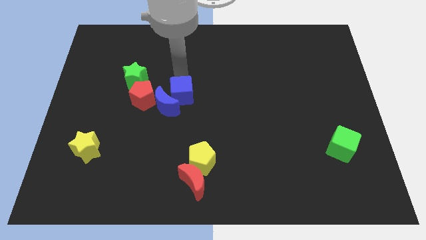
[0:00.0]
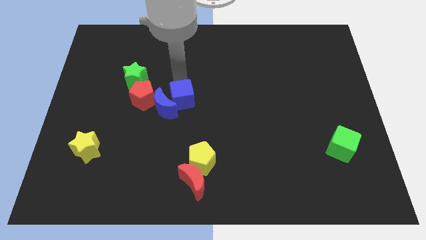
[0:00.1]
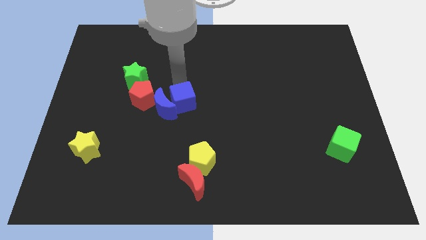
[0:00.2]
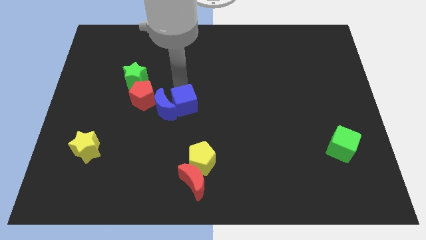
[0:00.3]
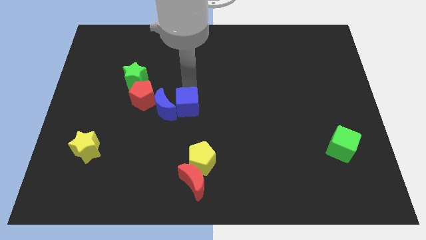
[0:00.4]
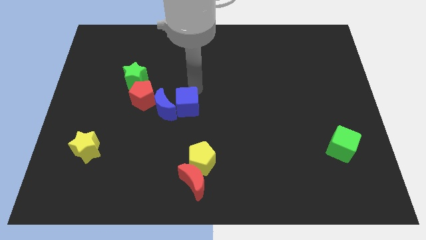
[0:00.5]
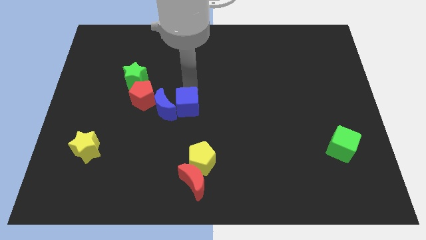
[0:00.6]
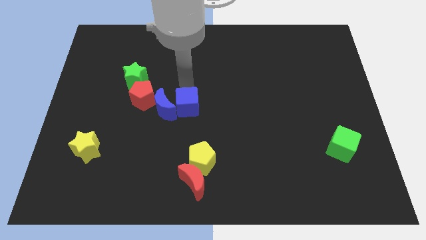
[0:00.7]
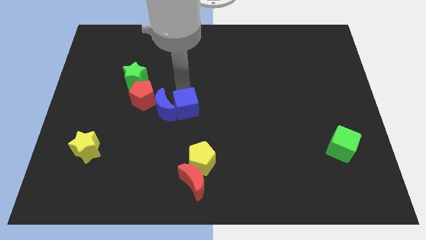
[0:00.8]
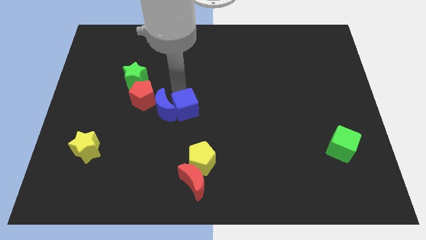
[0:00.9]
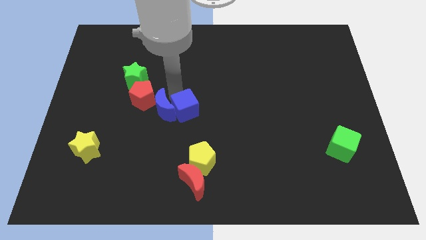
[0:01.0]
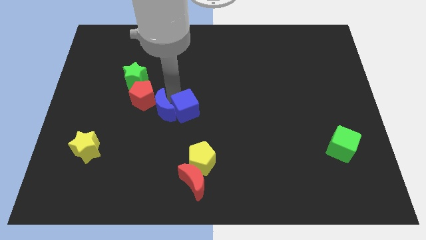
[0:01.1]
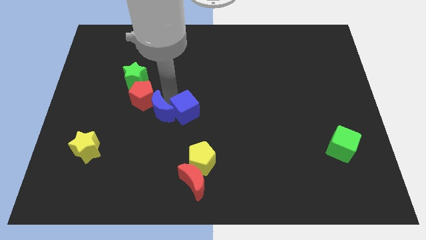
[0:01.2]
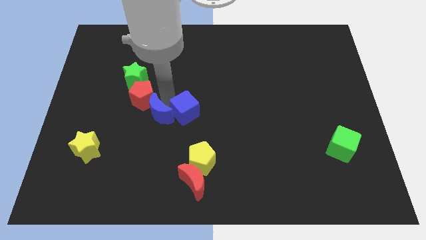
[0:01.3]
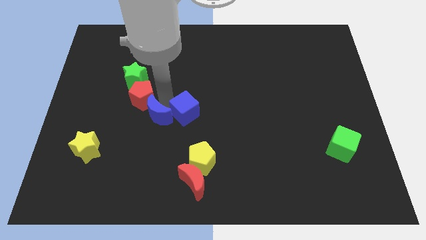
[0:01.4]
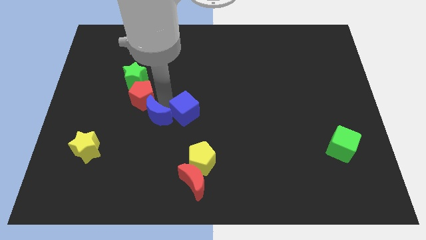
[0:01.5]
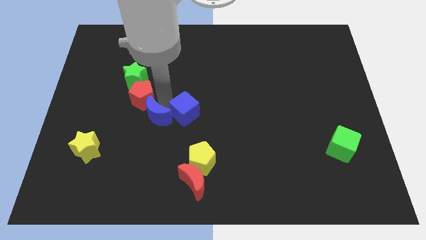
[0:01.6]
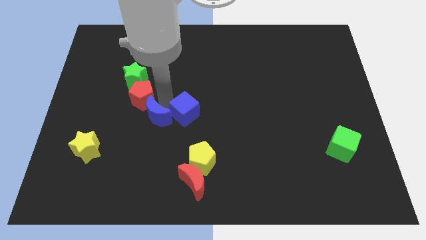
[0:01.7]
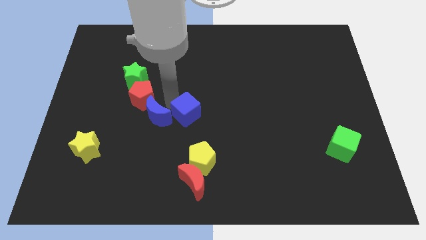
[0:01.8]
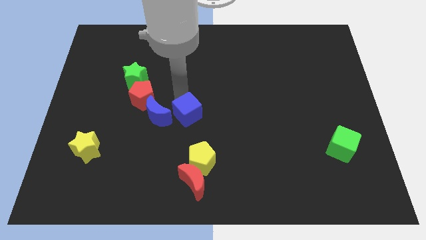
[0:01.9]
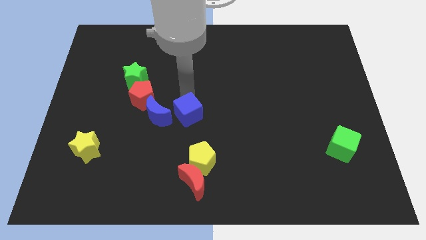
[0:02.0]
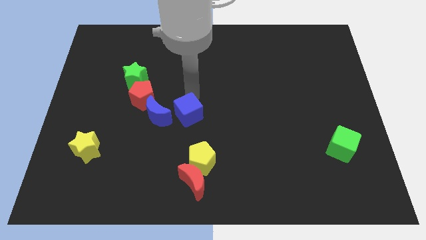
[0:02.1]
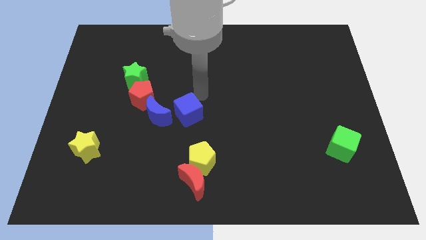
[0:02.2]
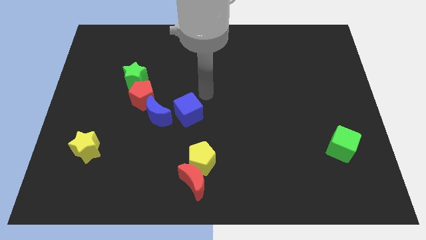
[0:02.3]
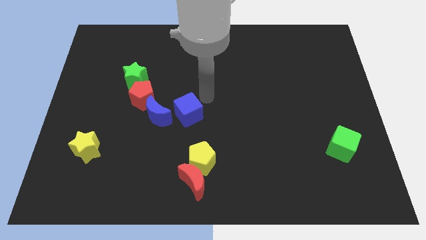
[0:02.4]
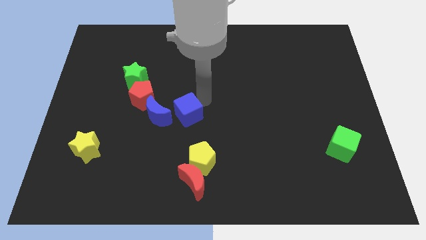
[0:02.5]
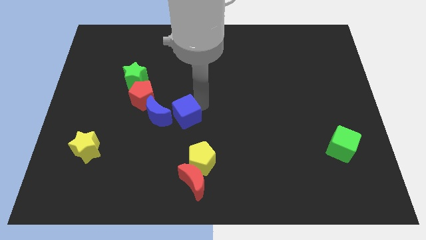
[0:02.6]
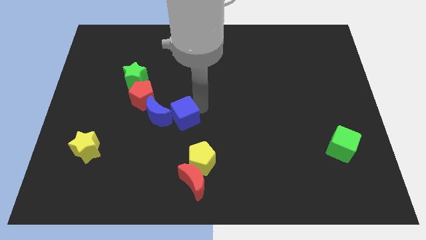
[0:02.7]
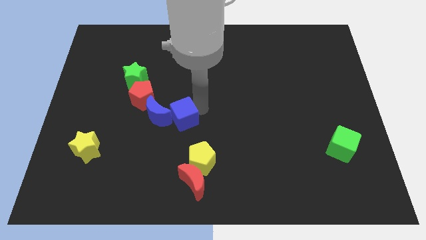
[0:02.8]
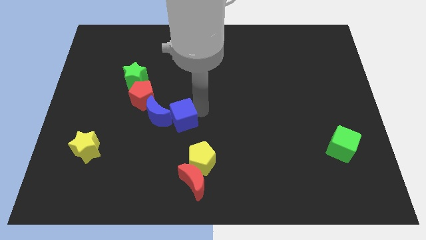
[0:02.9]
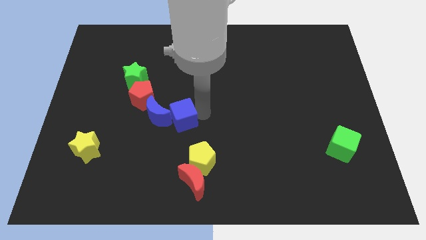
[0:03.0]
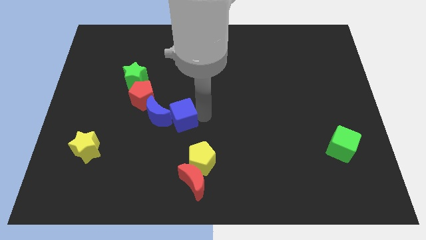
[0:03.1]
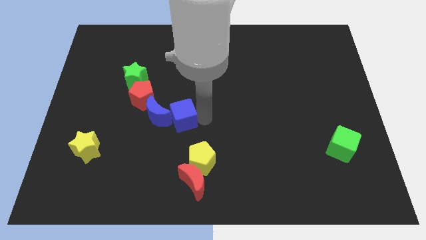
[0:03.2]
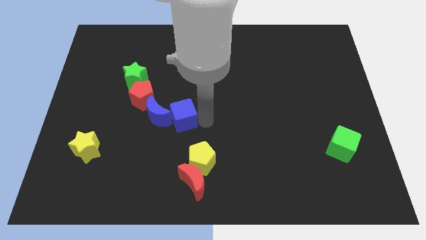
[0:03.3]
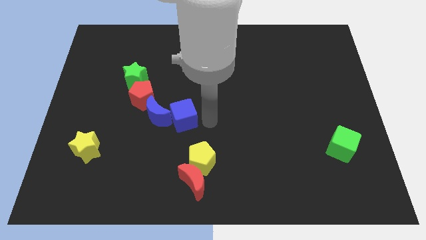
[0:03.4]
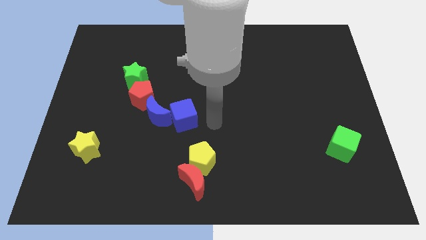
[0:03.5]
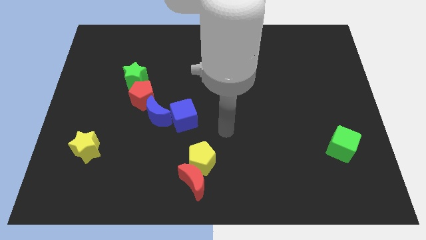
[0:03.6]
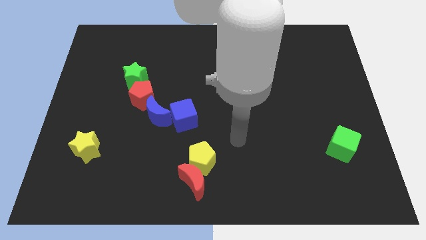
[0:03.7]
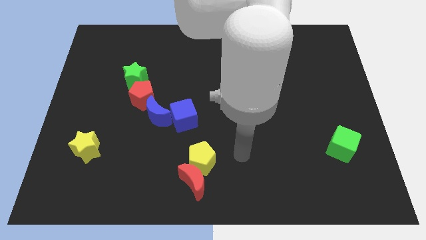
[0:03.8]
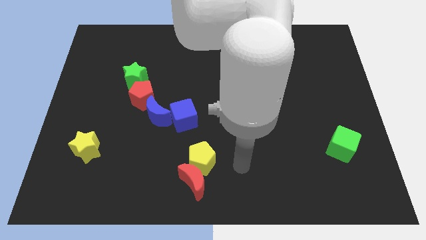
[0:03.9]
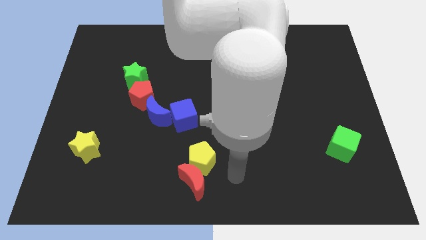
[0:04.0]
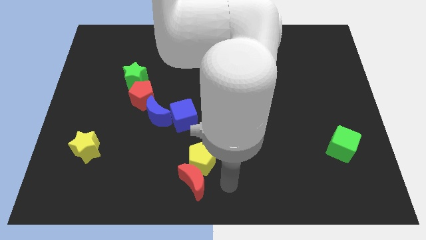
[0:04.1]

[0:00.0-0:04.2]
move the blue blocks slightly down

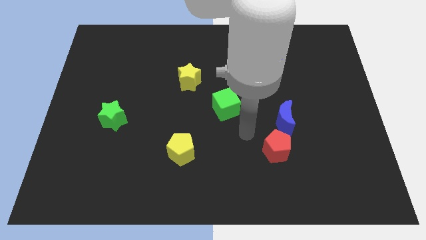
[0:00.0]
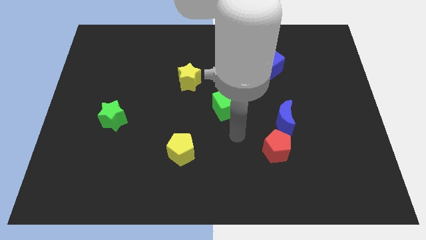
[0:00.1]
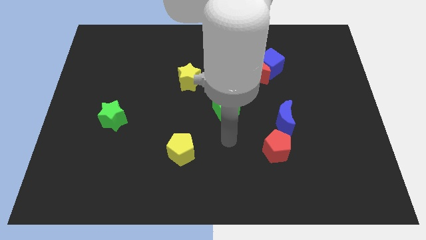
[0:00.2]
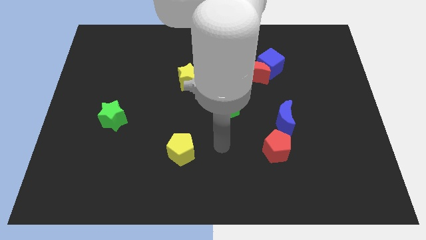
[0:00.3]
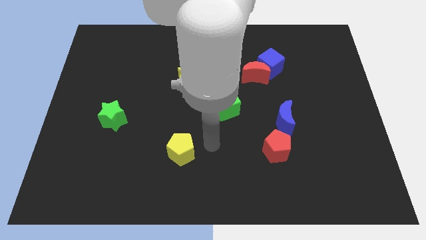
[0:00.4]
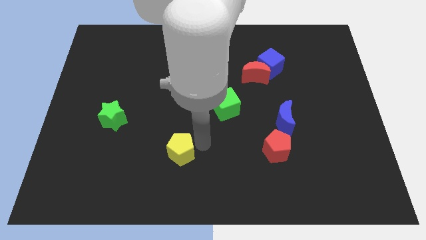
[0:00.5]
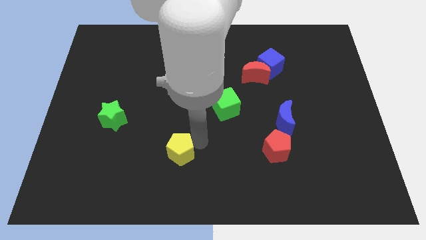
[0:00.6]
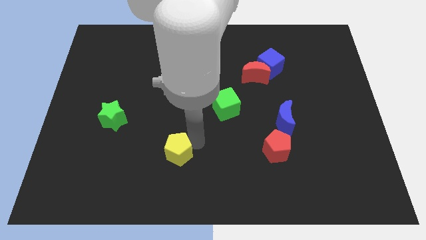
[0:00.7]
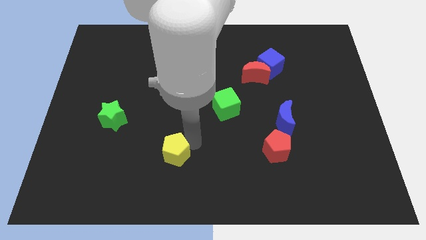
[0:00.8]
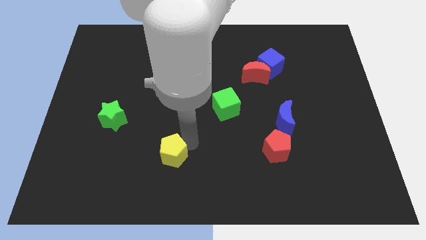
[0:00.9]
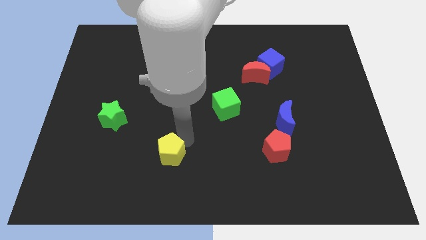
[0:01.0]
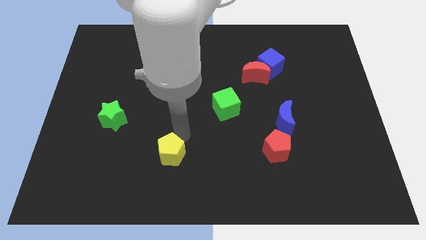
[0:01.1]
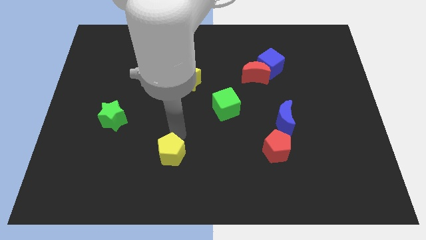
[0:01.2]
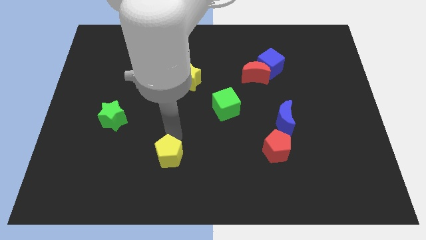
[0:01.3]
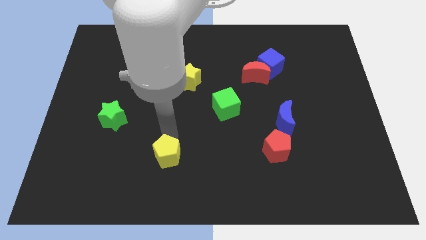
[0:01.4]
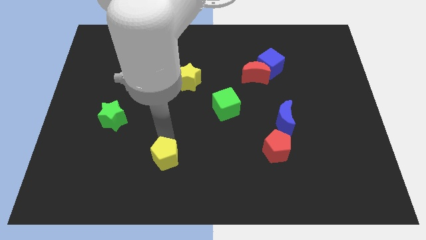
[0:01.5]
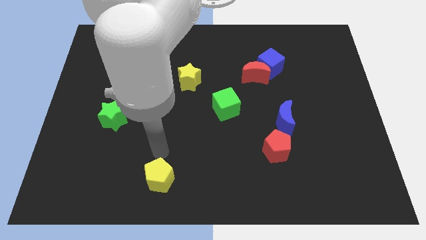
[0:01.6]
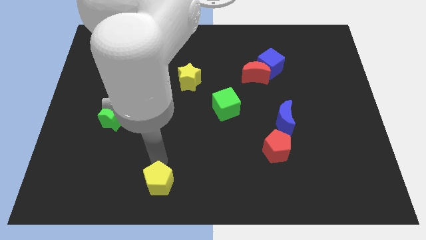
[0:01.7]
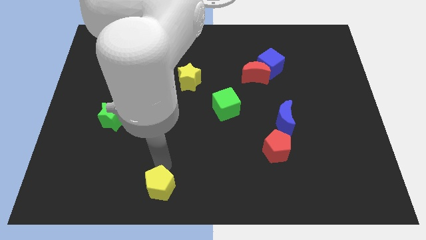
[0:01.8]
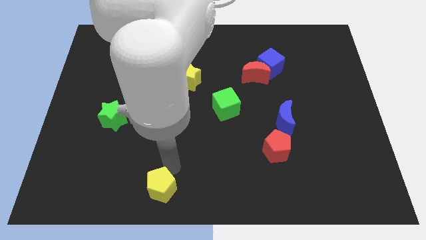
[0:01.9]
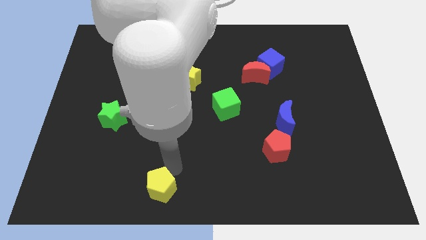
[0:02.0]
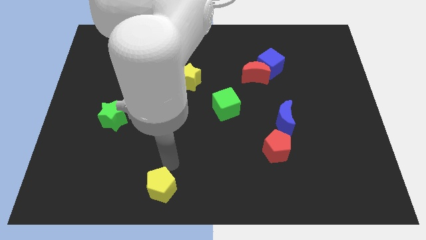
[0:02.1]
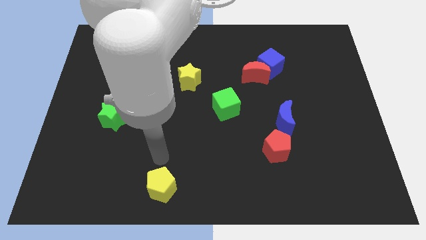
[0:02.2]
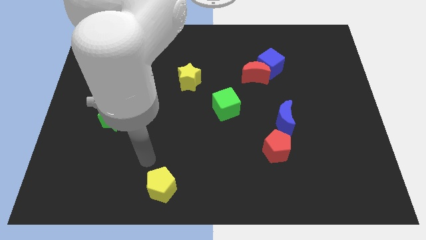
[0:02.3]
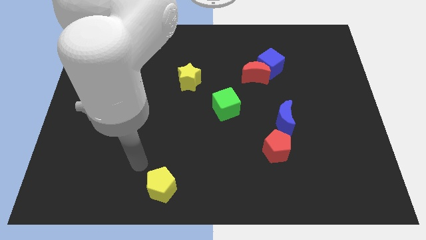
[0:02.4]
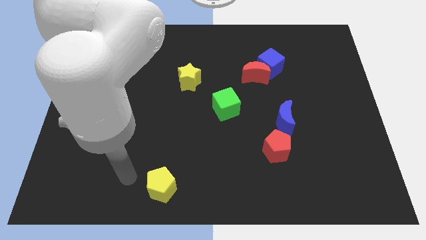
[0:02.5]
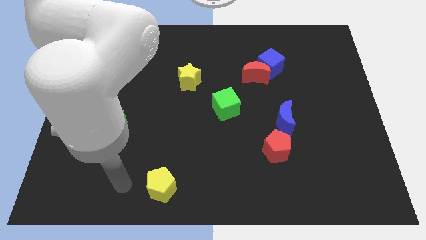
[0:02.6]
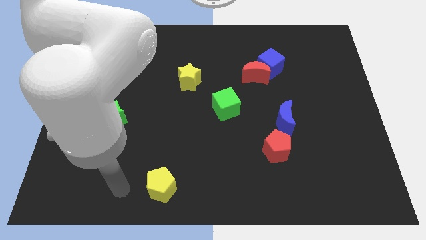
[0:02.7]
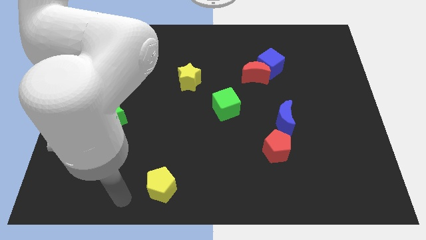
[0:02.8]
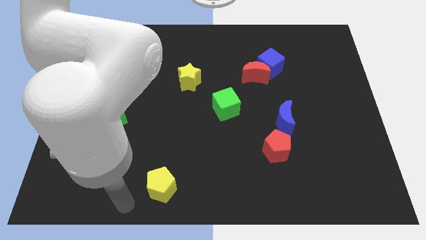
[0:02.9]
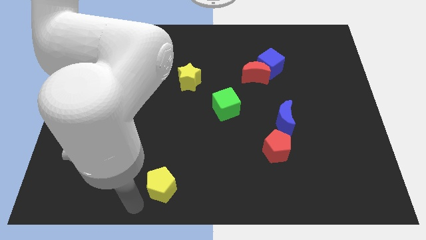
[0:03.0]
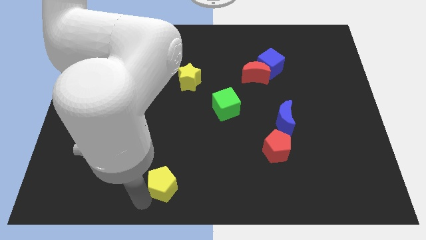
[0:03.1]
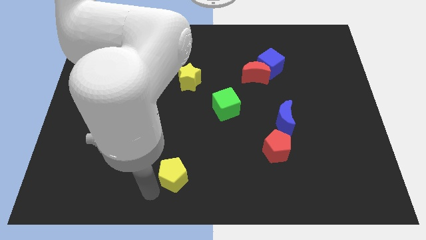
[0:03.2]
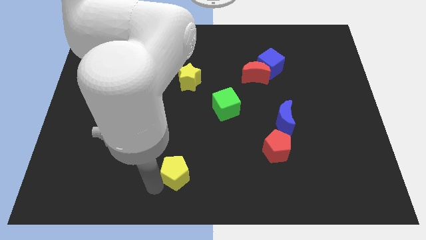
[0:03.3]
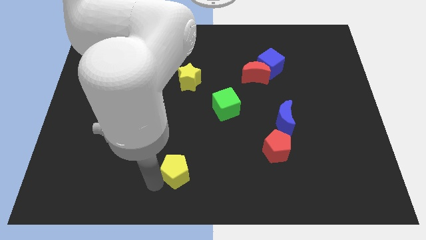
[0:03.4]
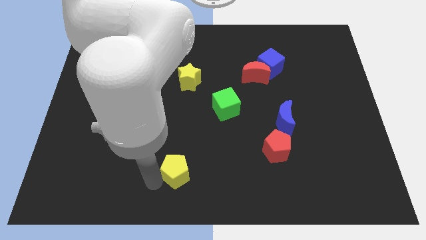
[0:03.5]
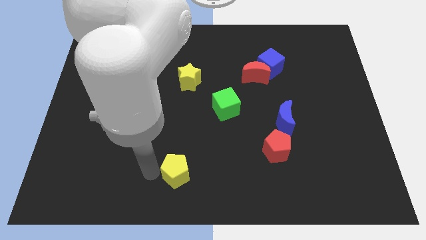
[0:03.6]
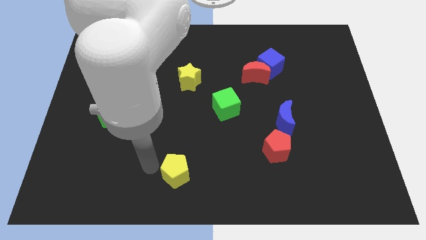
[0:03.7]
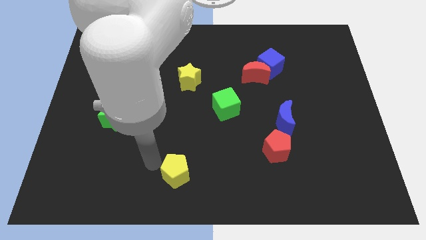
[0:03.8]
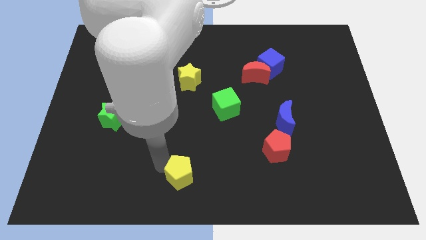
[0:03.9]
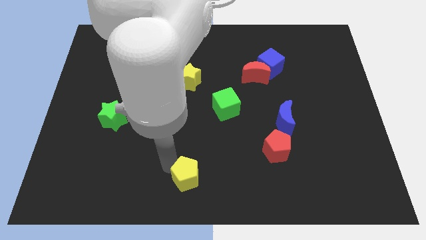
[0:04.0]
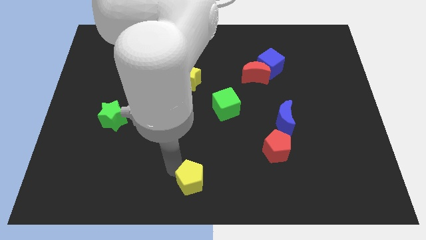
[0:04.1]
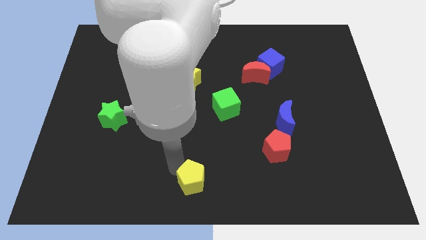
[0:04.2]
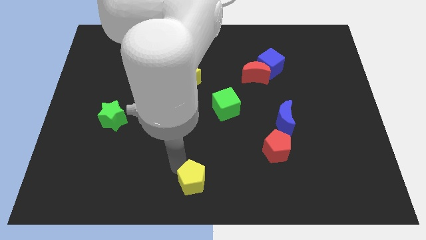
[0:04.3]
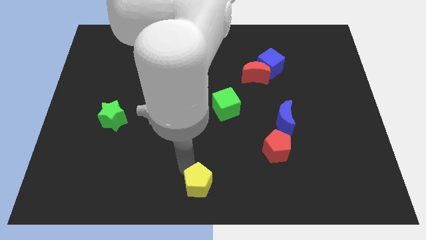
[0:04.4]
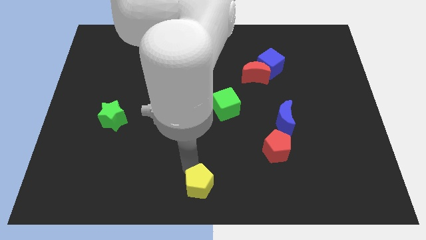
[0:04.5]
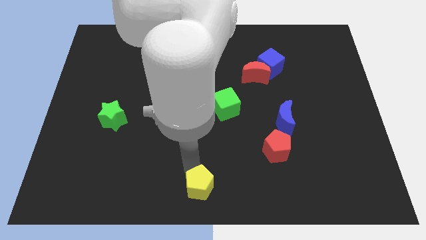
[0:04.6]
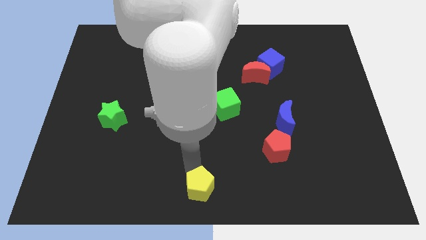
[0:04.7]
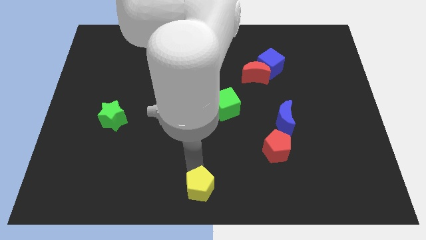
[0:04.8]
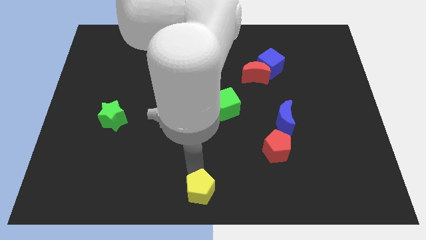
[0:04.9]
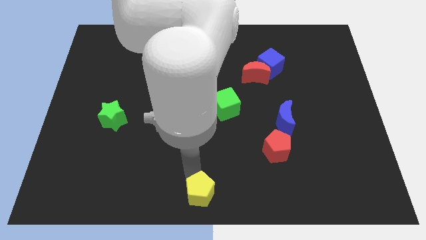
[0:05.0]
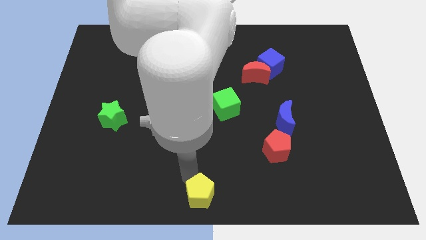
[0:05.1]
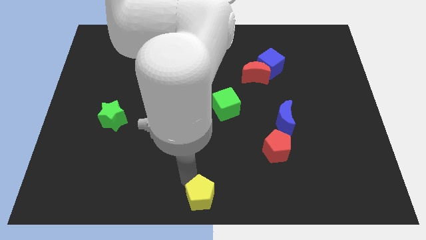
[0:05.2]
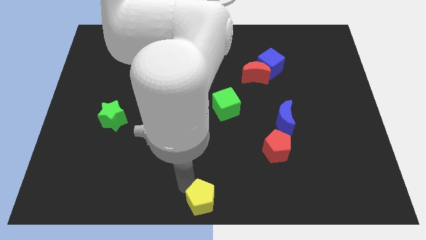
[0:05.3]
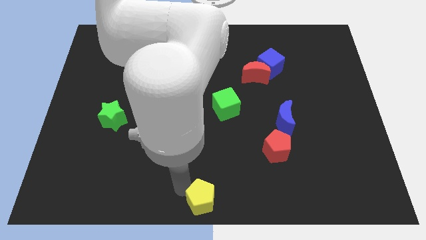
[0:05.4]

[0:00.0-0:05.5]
move the yellow pentagon to the bottom center of the board
